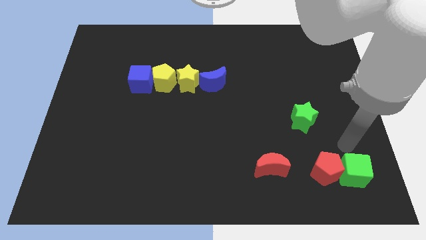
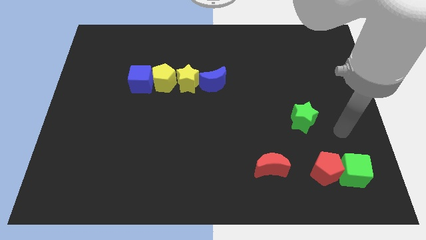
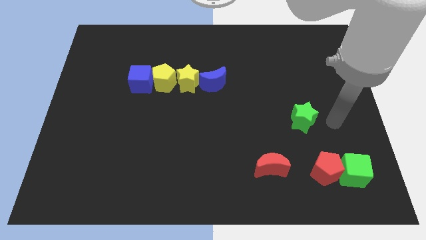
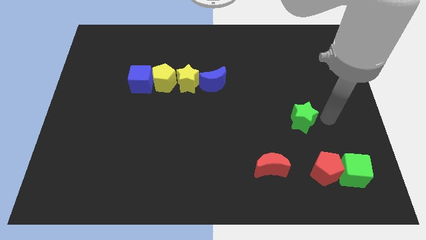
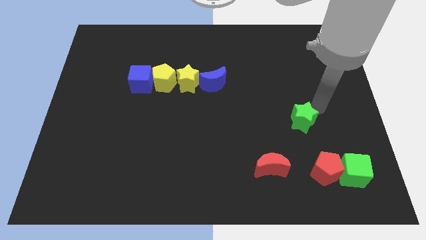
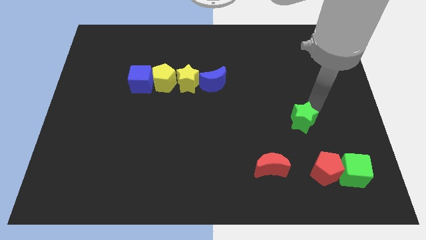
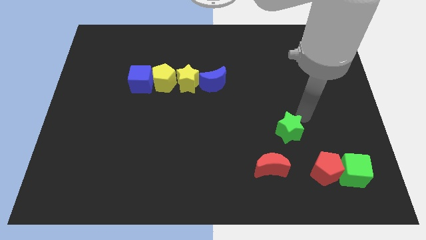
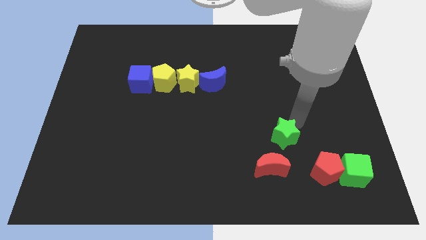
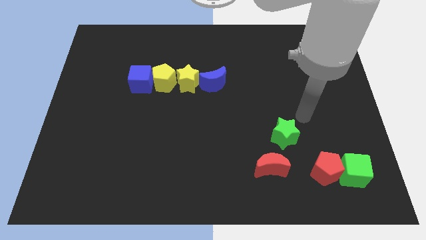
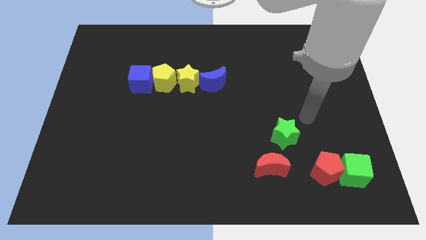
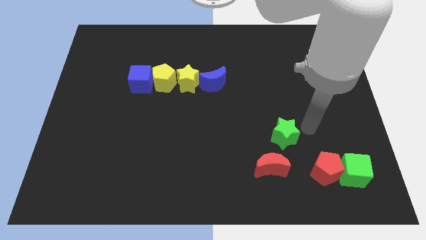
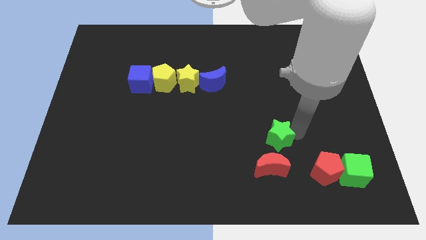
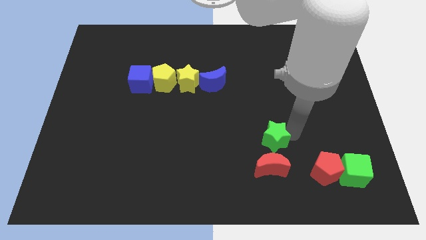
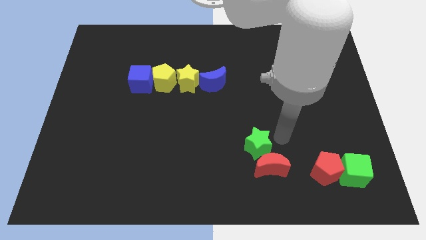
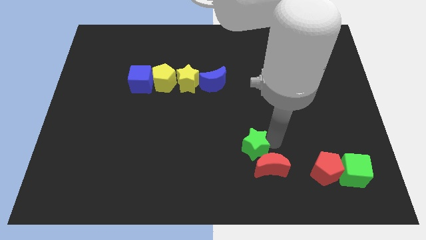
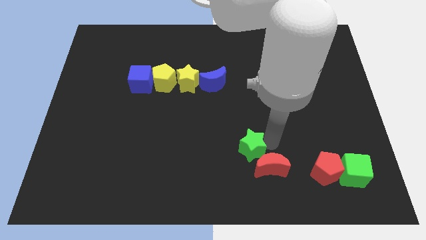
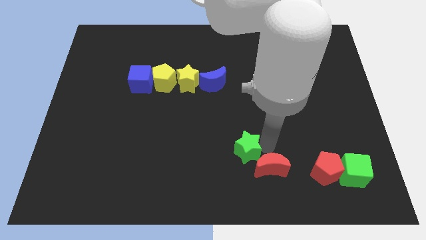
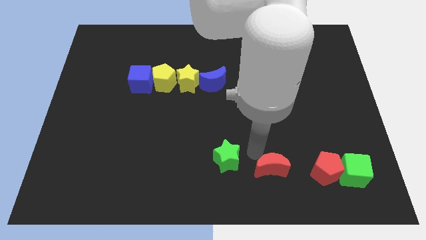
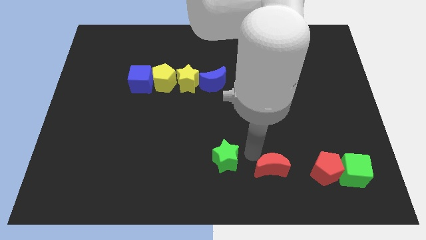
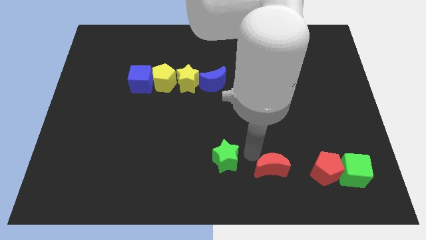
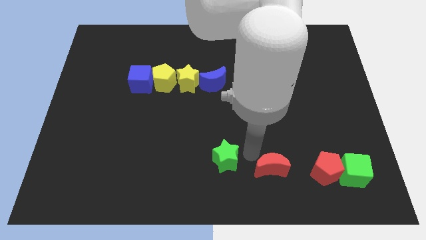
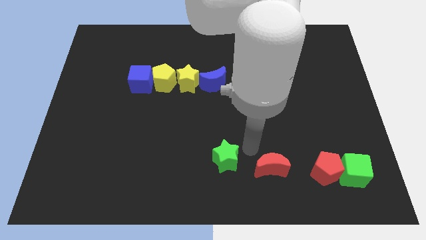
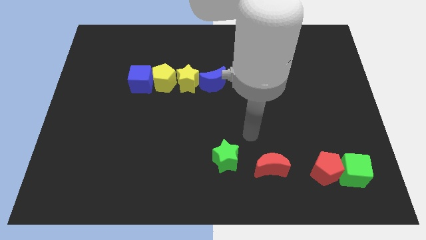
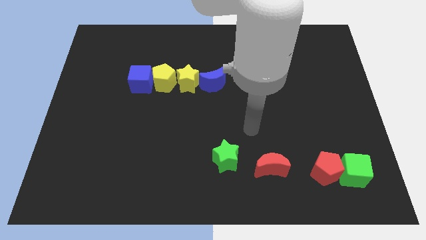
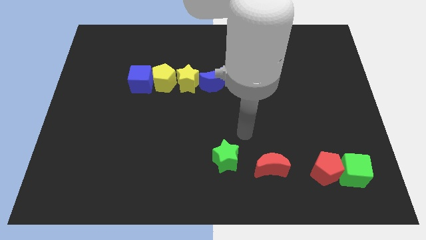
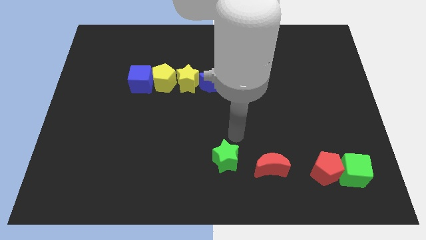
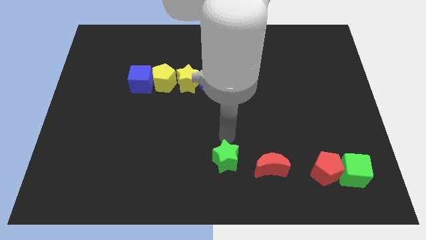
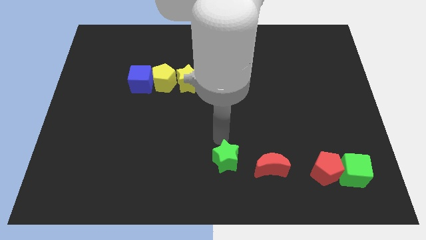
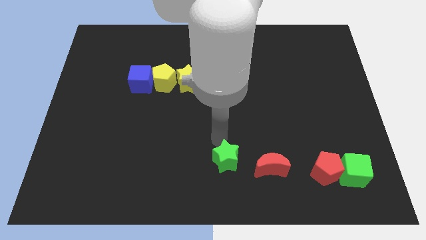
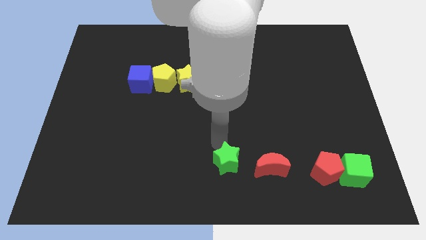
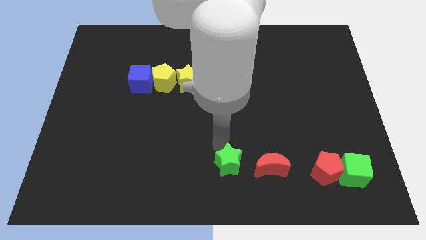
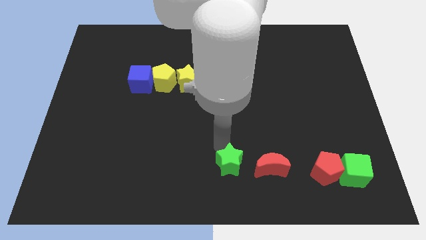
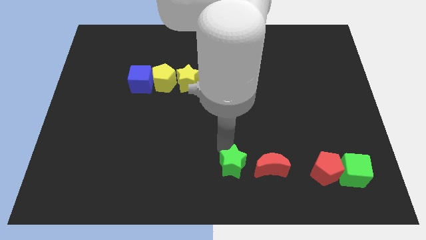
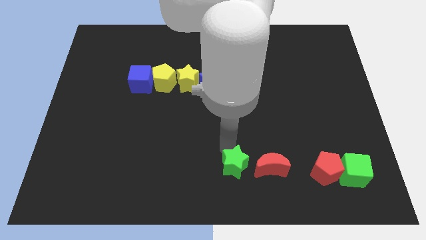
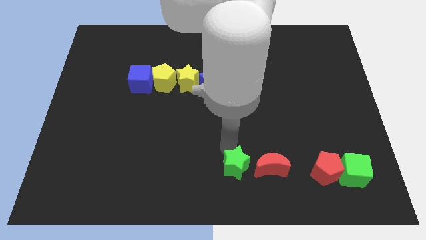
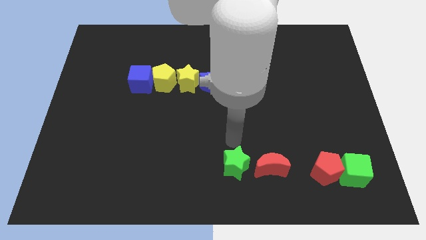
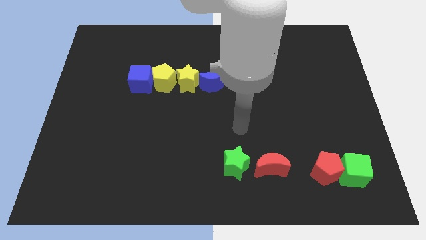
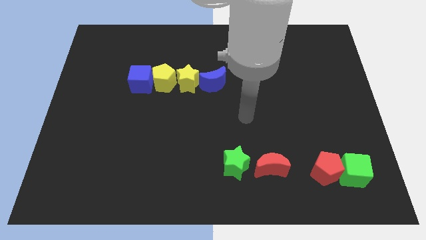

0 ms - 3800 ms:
place the green star left to the red crescent

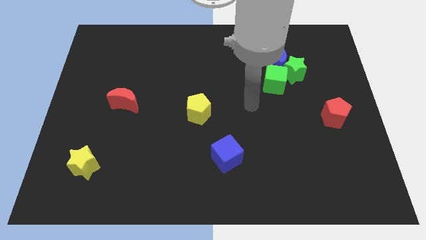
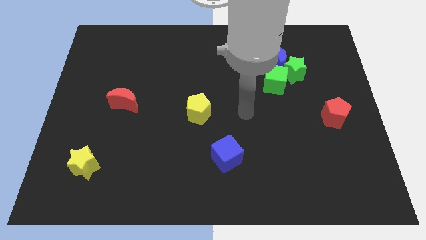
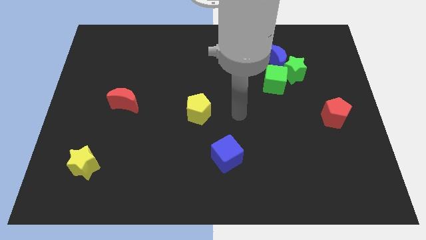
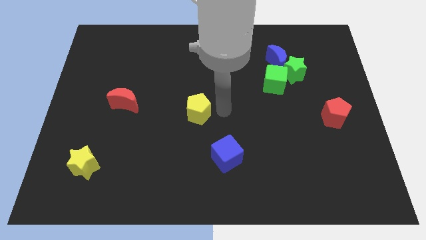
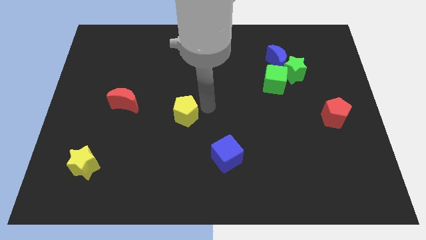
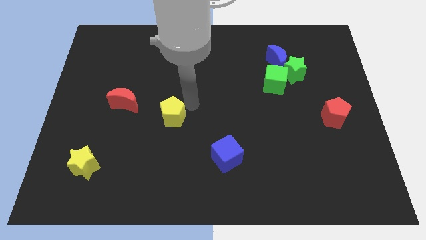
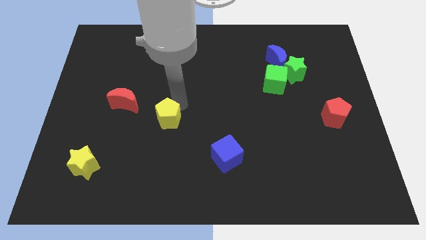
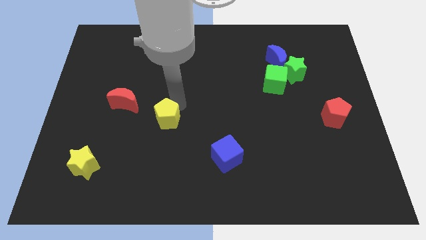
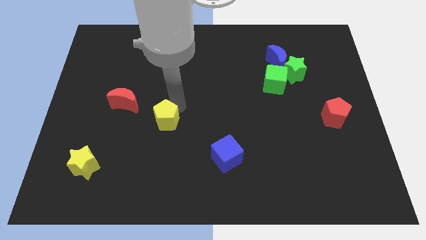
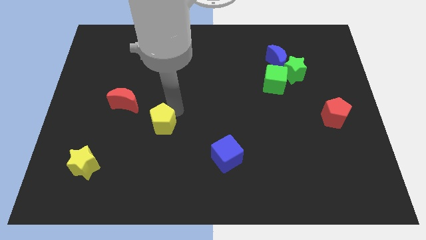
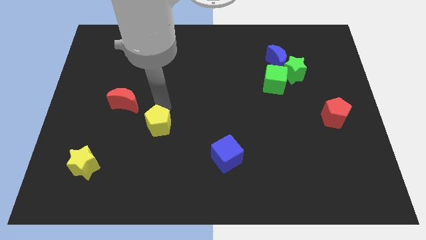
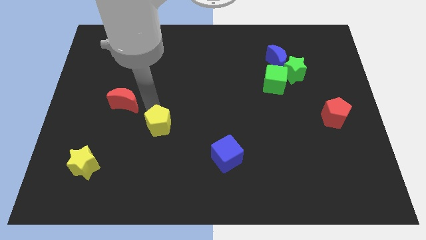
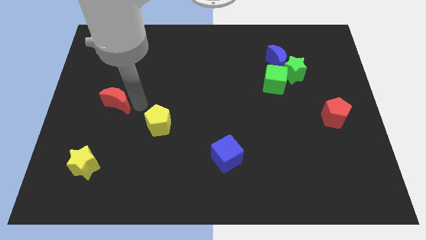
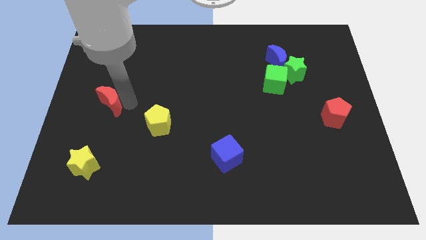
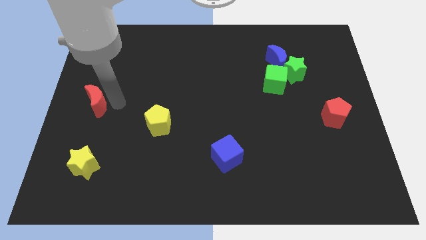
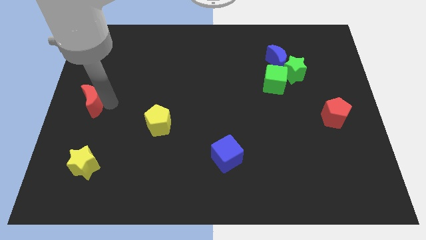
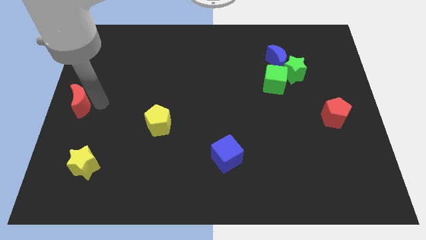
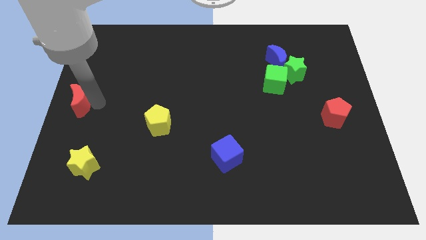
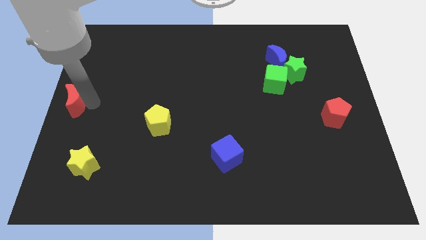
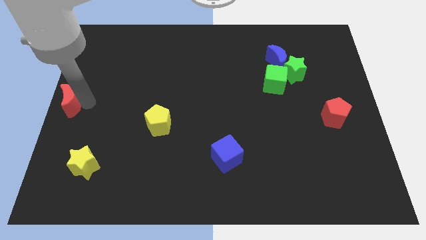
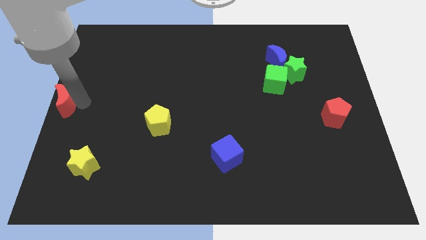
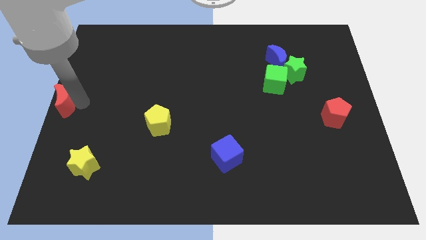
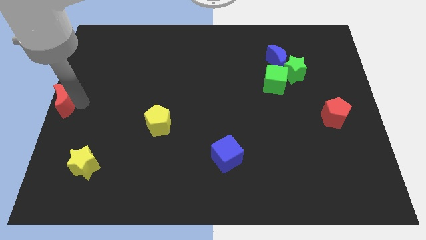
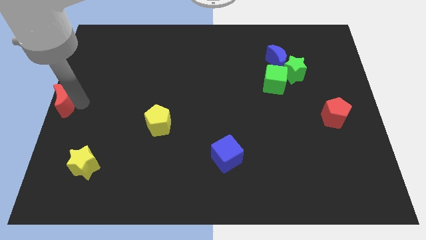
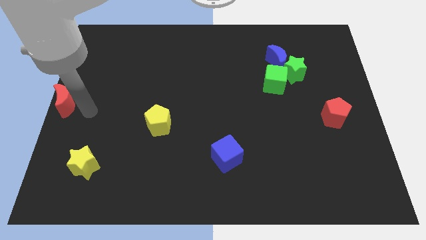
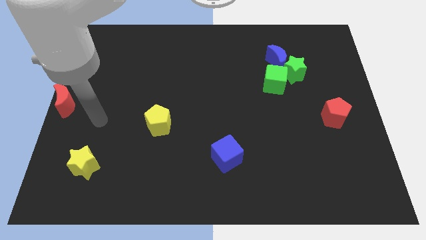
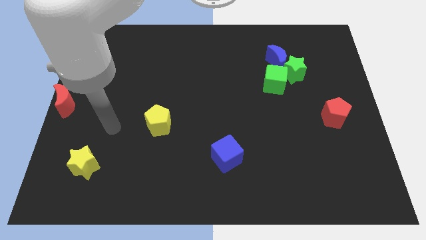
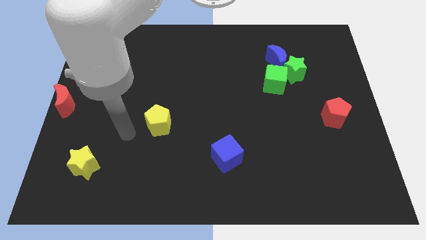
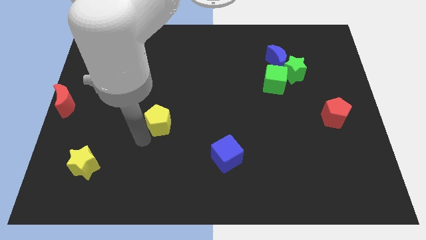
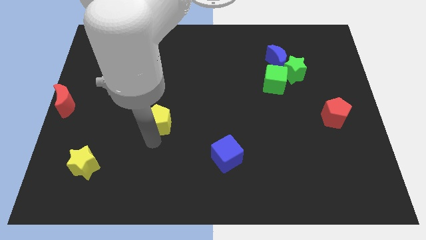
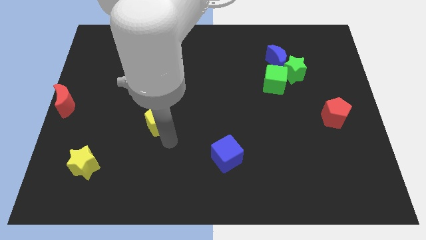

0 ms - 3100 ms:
place red crescent at the center left corner of the board

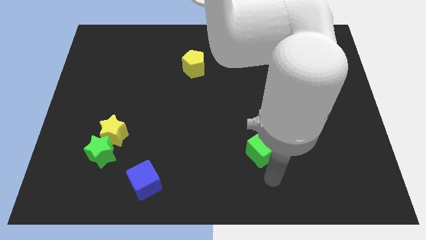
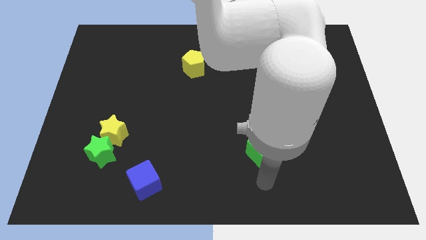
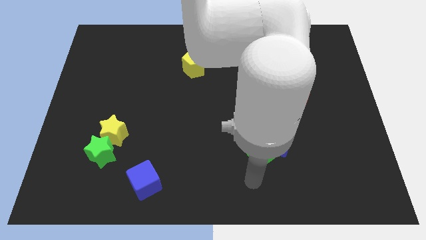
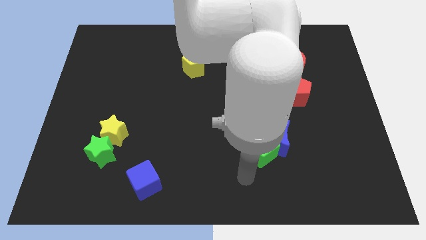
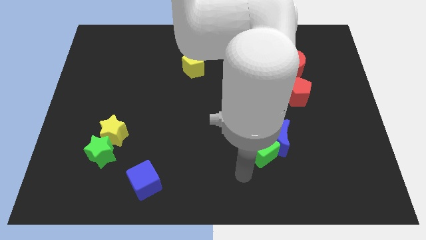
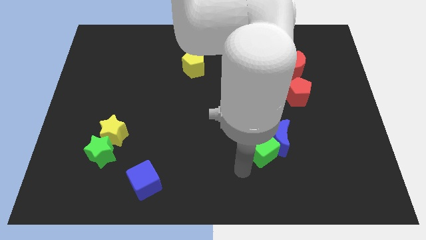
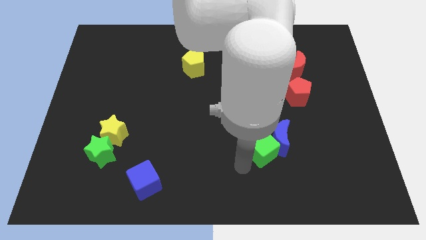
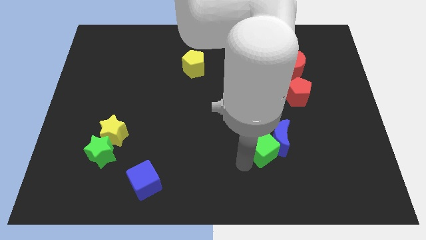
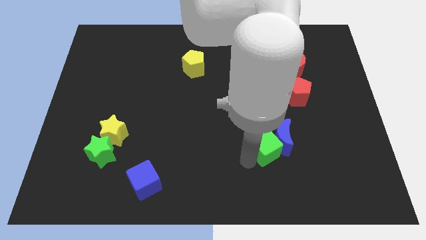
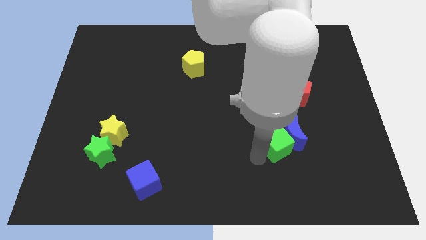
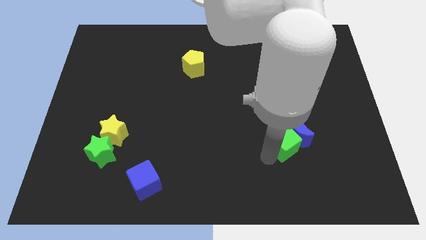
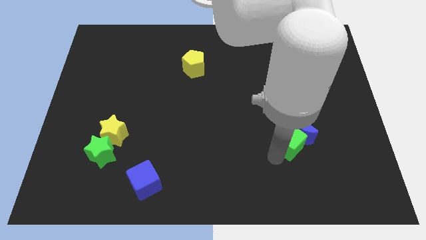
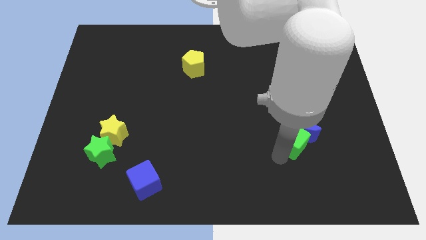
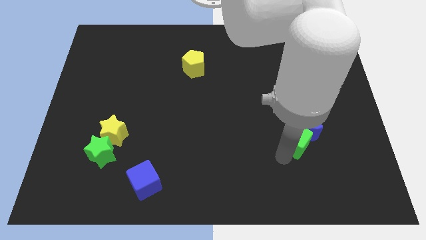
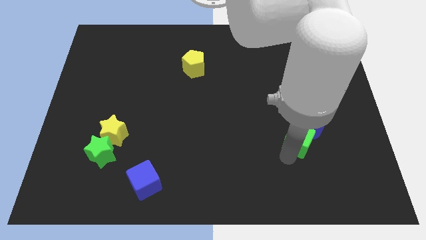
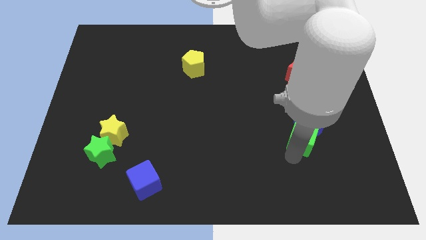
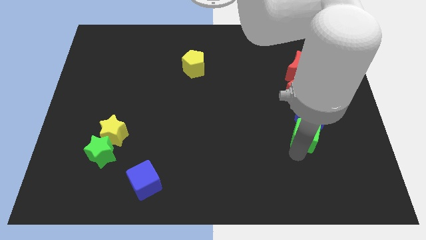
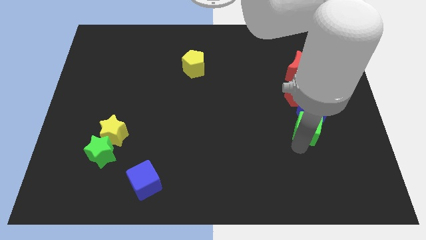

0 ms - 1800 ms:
push the green cube and blue moon towards the right side

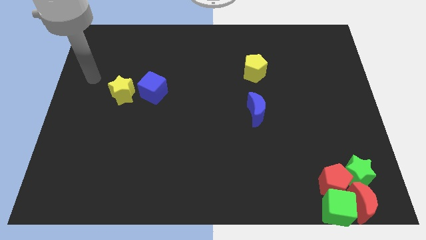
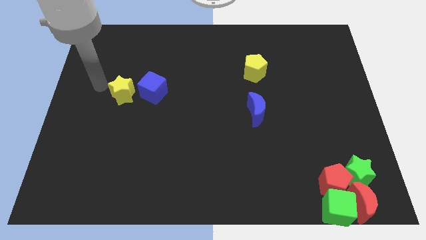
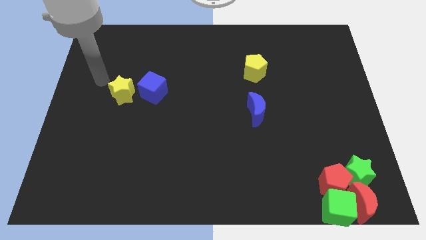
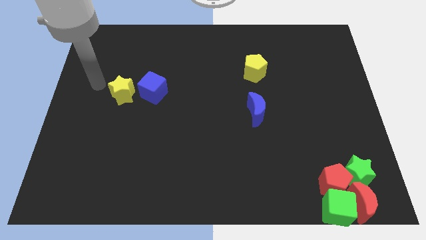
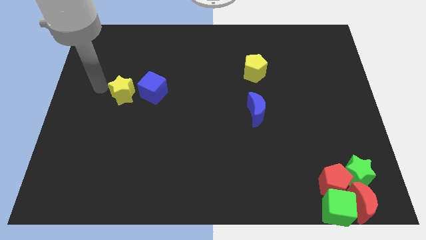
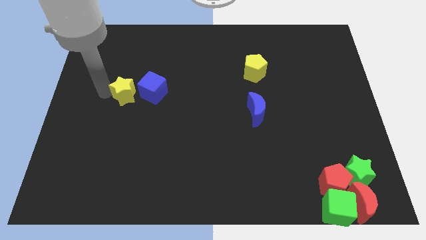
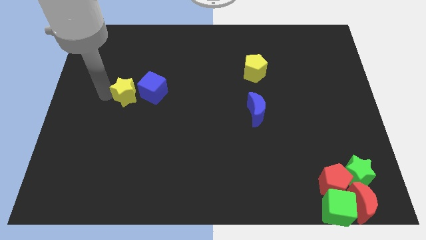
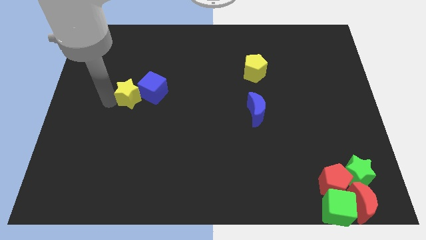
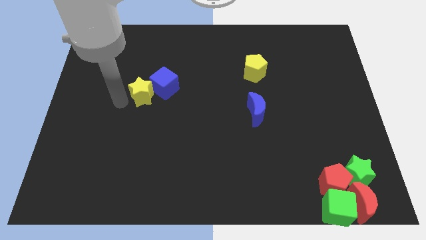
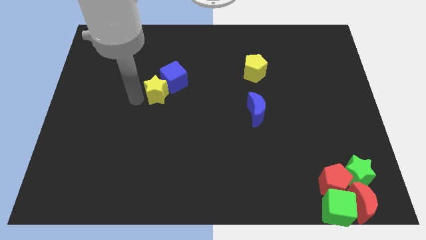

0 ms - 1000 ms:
push the yellow star into the blue cube
